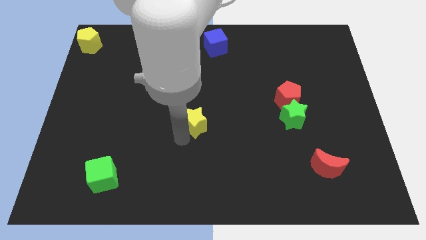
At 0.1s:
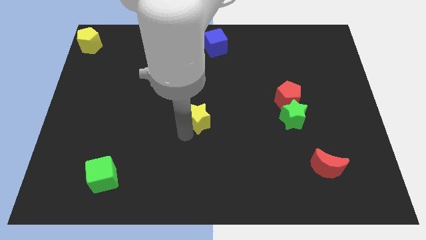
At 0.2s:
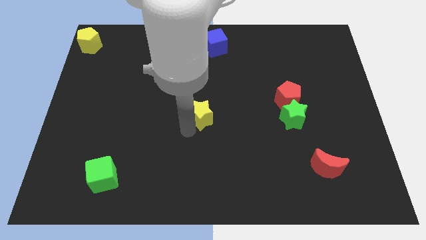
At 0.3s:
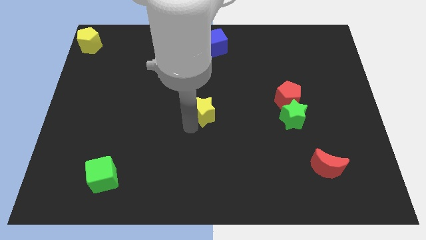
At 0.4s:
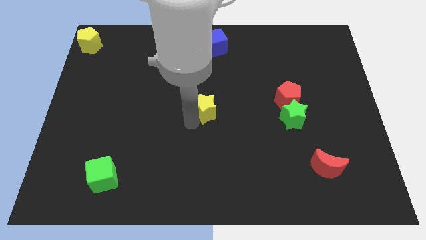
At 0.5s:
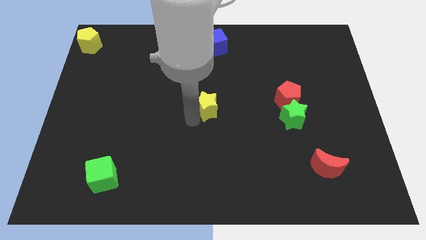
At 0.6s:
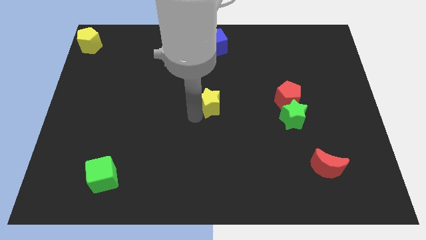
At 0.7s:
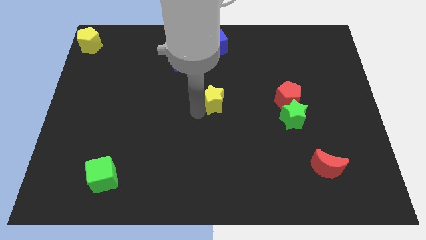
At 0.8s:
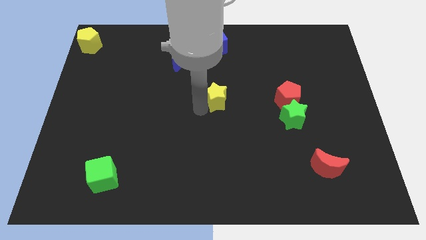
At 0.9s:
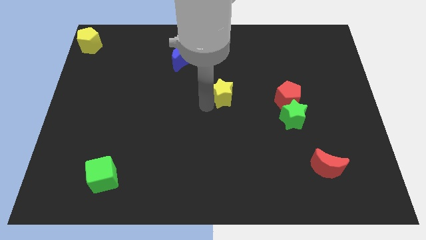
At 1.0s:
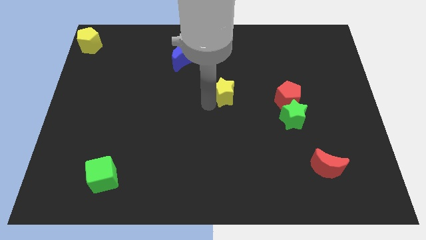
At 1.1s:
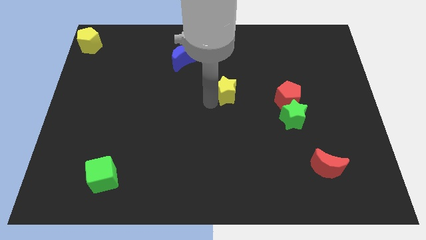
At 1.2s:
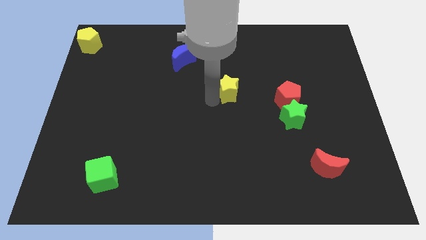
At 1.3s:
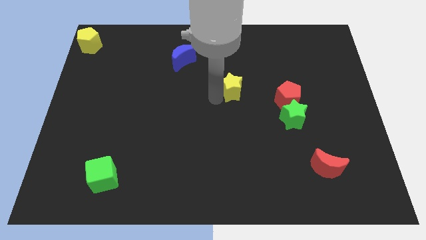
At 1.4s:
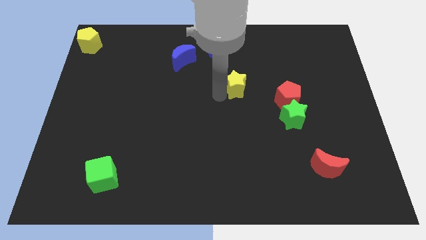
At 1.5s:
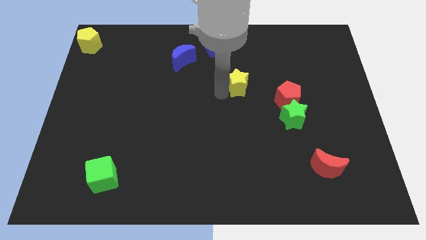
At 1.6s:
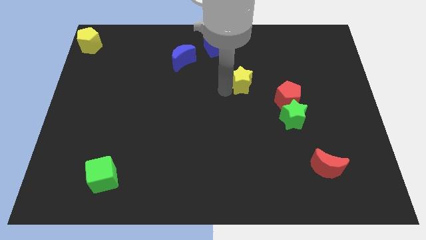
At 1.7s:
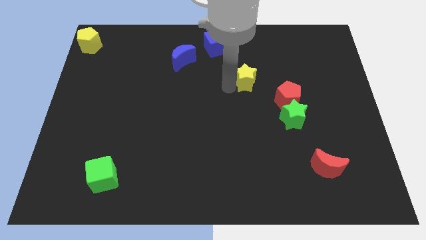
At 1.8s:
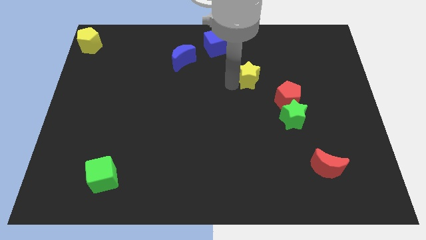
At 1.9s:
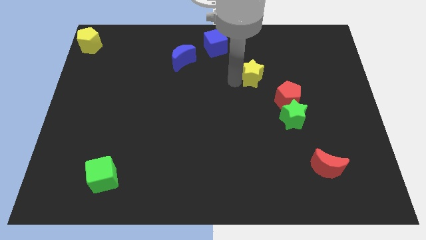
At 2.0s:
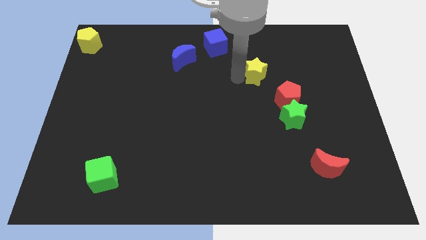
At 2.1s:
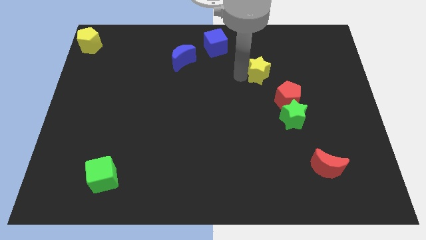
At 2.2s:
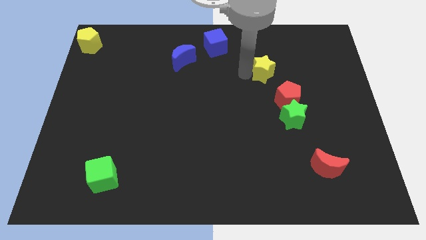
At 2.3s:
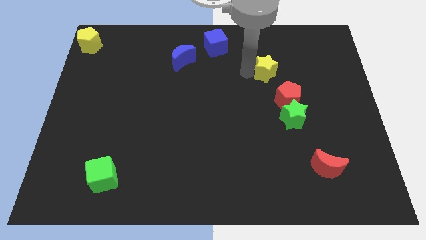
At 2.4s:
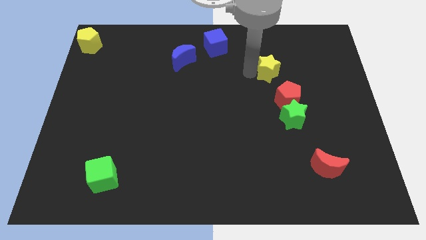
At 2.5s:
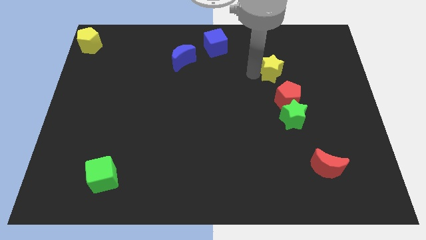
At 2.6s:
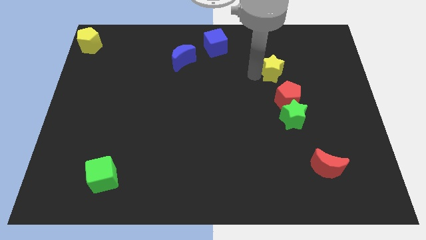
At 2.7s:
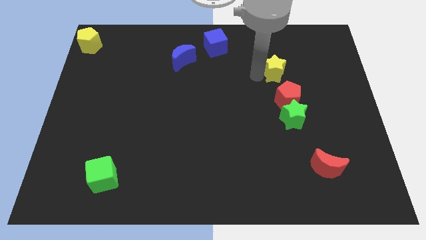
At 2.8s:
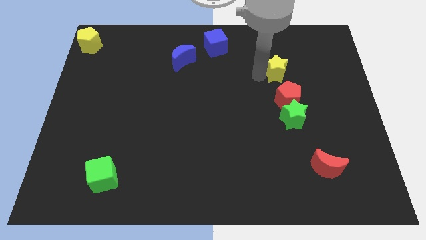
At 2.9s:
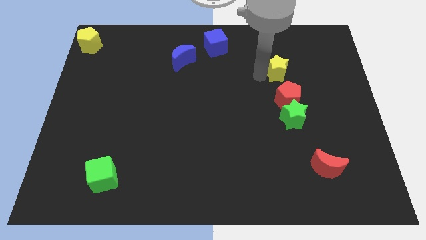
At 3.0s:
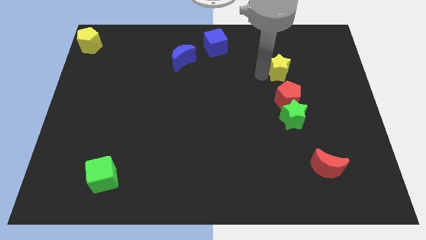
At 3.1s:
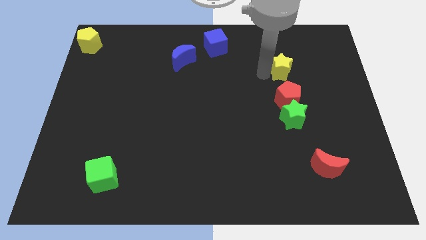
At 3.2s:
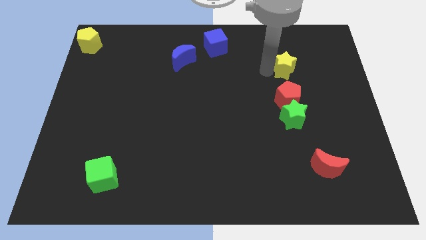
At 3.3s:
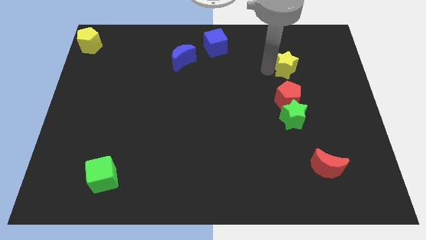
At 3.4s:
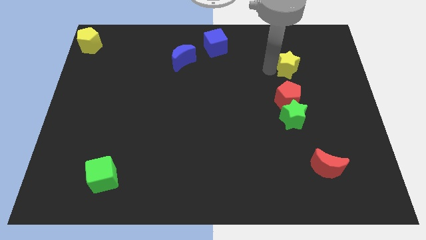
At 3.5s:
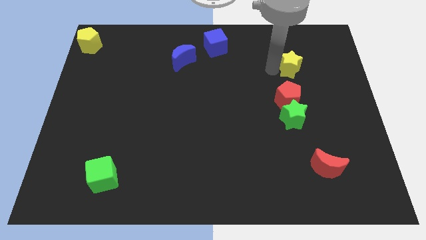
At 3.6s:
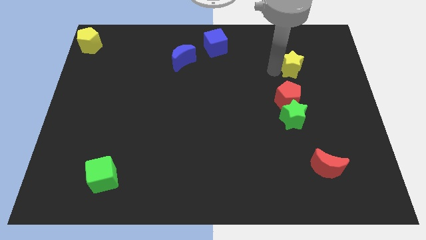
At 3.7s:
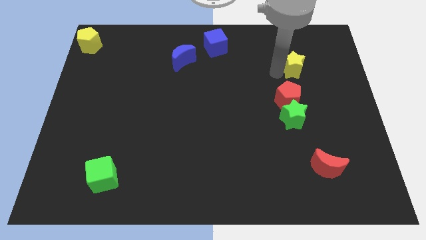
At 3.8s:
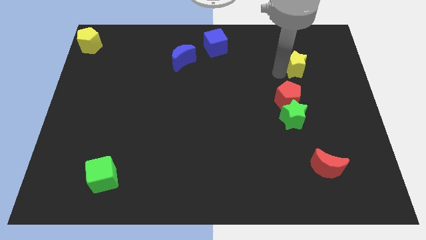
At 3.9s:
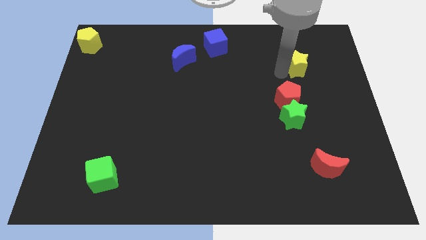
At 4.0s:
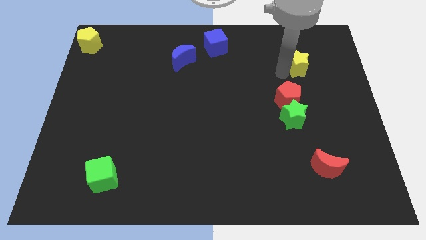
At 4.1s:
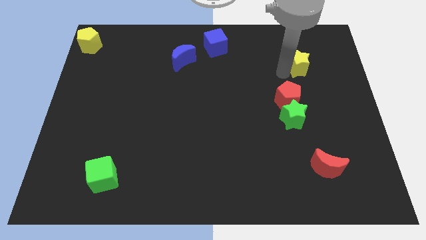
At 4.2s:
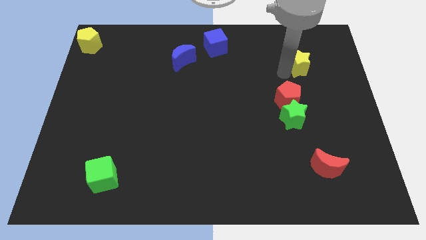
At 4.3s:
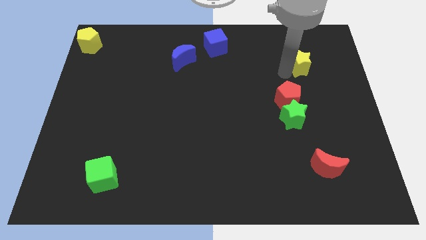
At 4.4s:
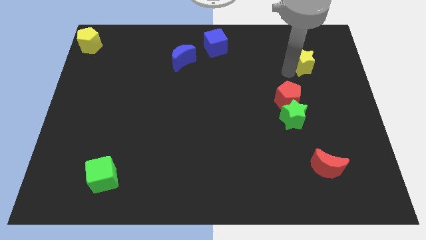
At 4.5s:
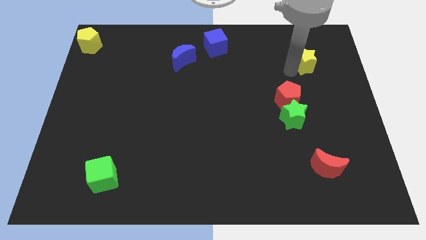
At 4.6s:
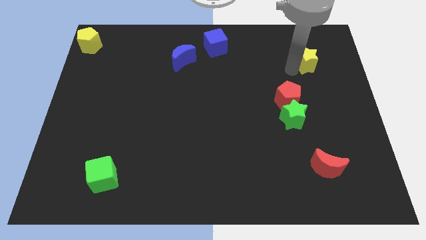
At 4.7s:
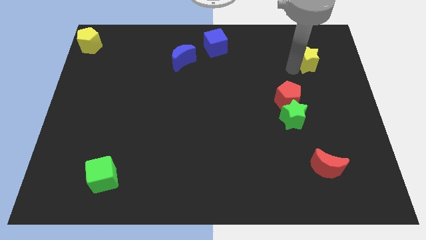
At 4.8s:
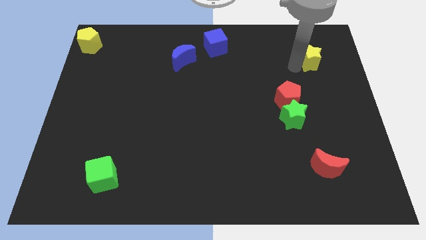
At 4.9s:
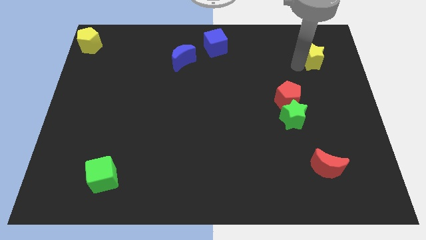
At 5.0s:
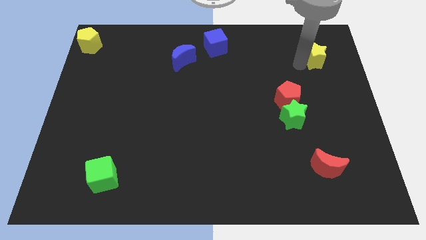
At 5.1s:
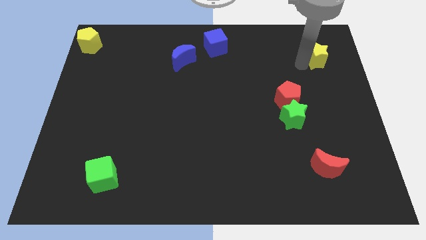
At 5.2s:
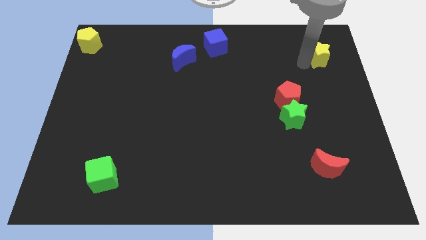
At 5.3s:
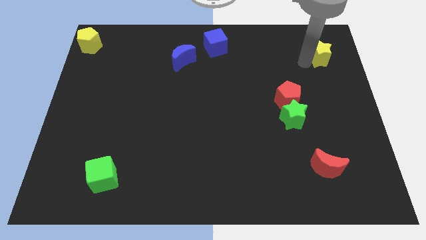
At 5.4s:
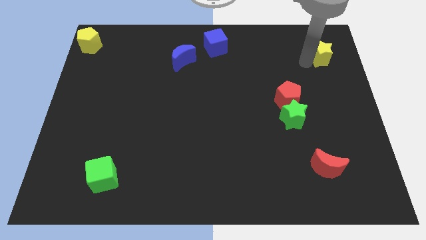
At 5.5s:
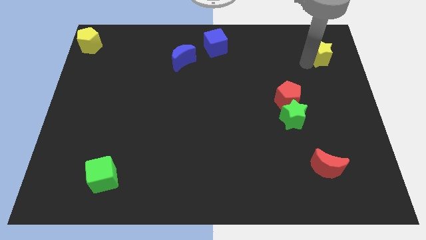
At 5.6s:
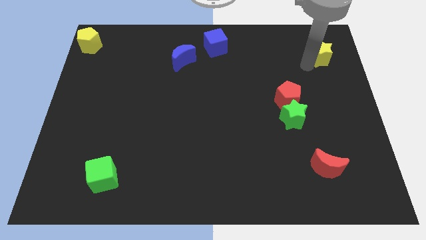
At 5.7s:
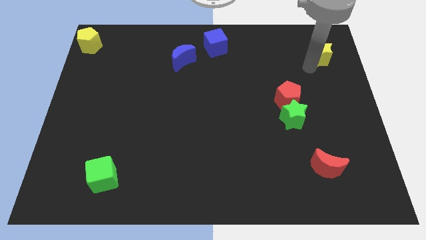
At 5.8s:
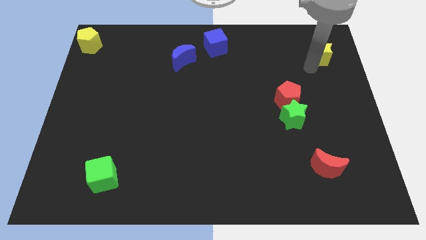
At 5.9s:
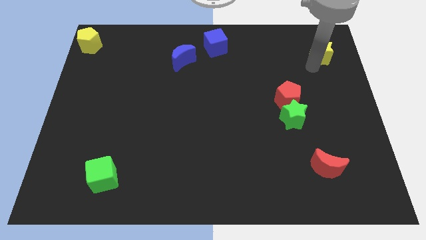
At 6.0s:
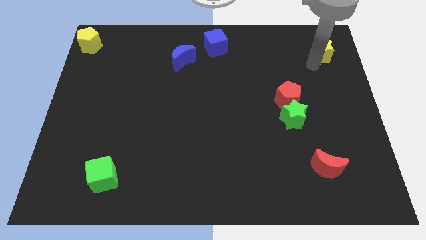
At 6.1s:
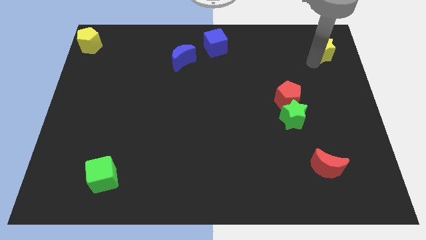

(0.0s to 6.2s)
put the yellow star above the red crescent

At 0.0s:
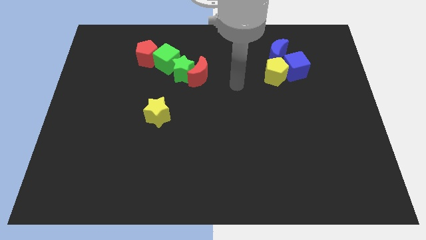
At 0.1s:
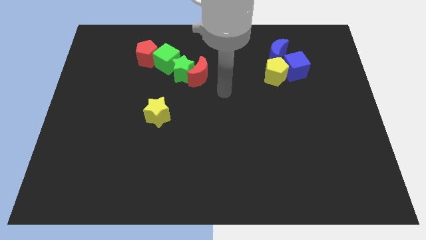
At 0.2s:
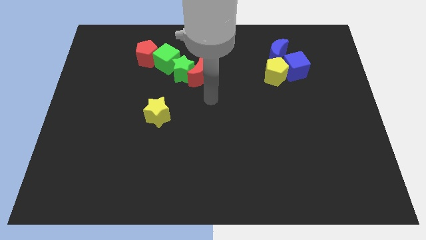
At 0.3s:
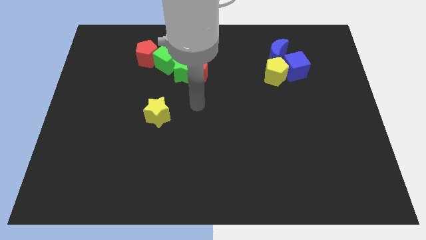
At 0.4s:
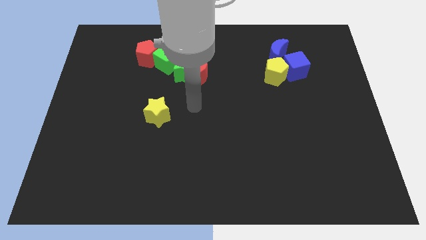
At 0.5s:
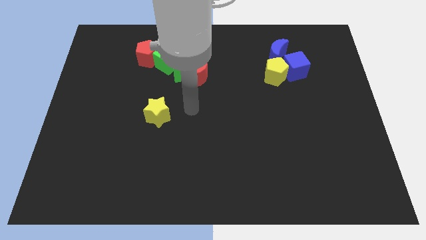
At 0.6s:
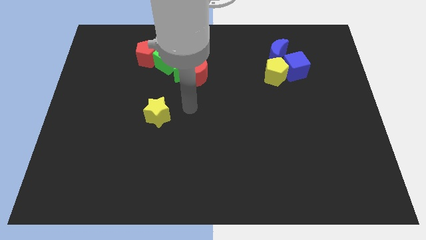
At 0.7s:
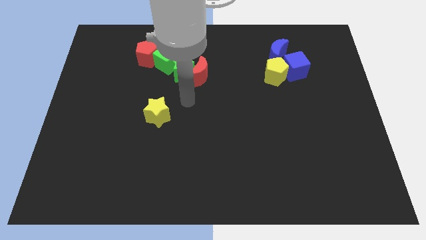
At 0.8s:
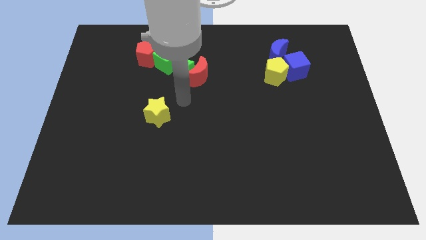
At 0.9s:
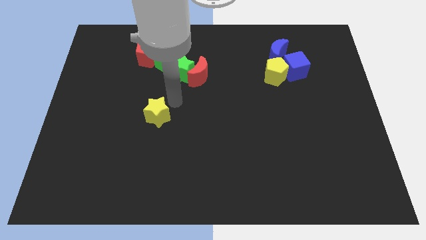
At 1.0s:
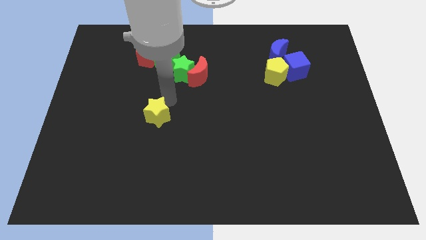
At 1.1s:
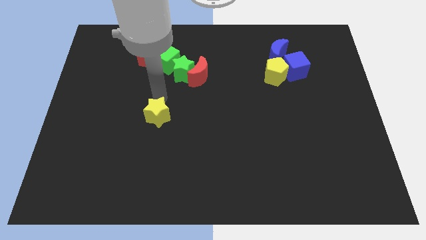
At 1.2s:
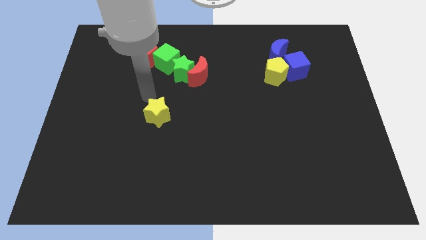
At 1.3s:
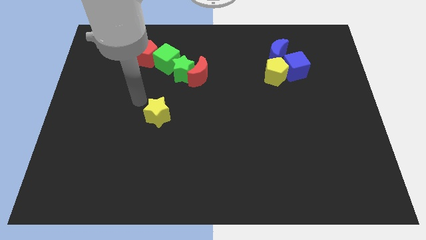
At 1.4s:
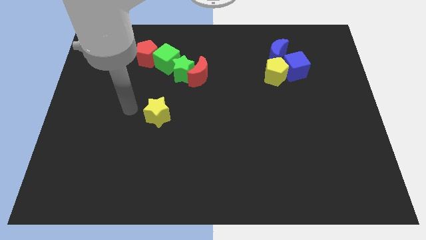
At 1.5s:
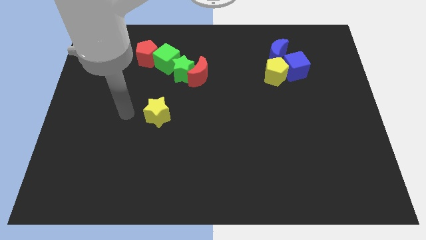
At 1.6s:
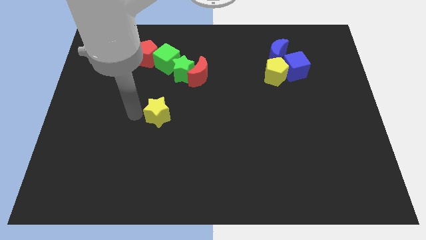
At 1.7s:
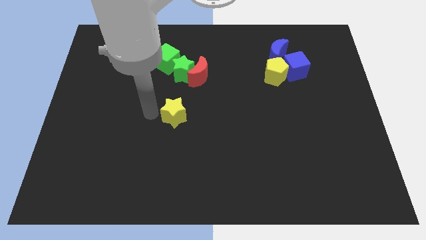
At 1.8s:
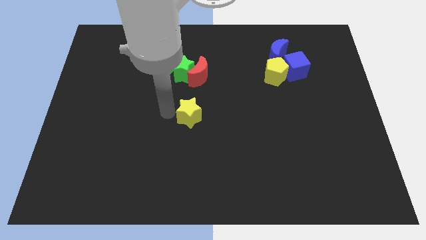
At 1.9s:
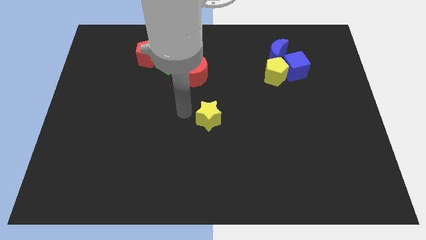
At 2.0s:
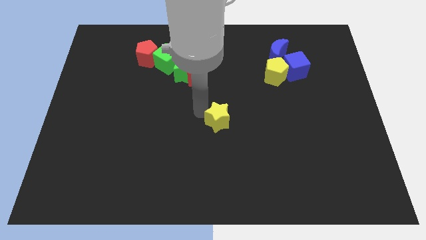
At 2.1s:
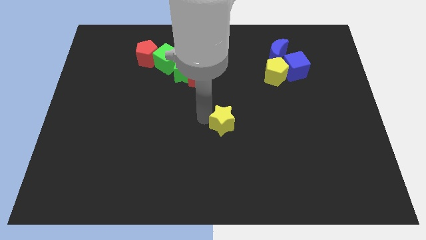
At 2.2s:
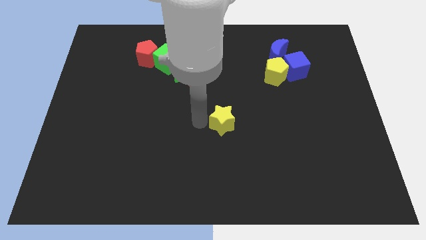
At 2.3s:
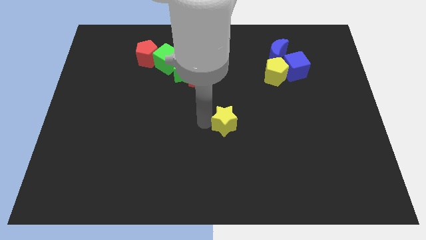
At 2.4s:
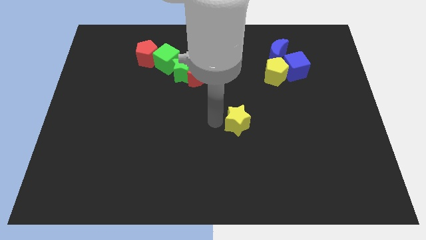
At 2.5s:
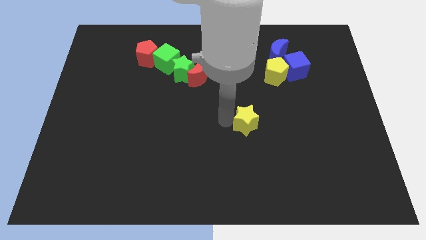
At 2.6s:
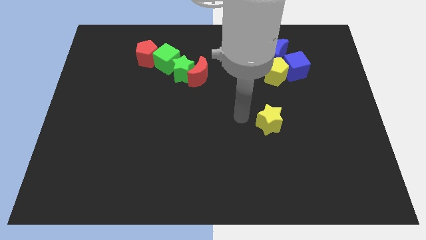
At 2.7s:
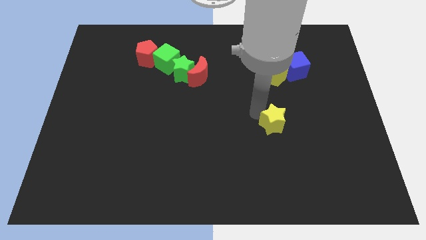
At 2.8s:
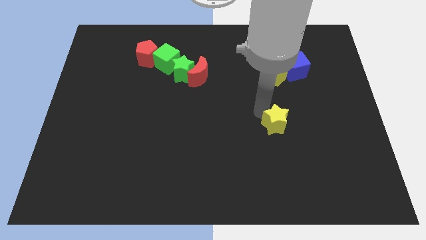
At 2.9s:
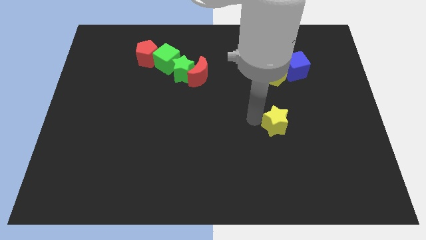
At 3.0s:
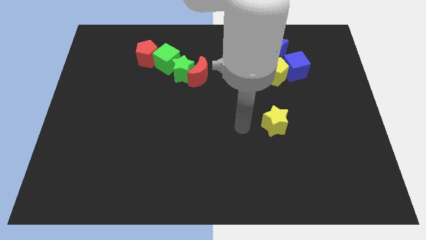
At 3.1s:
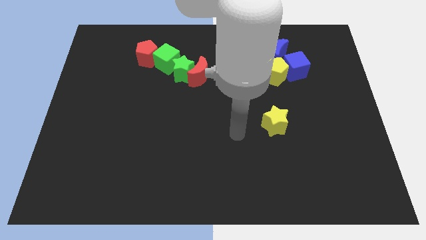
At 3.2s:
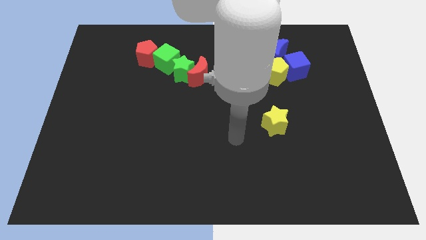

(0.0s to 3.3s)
move the yellow star slightly to the right
